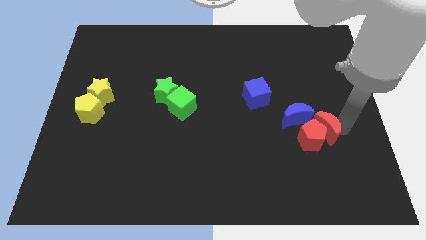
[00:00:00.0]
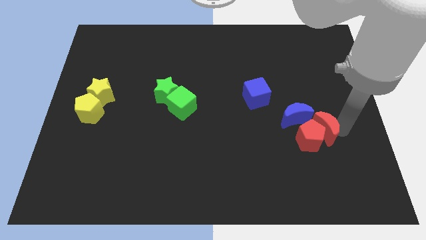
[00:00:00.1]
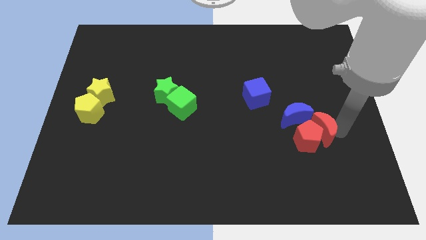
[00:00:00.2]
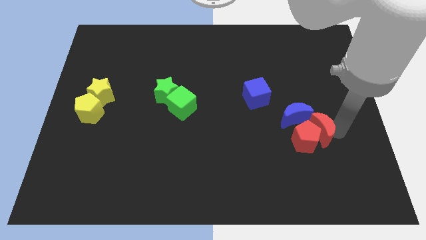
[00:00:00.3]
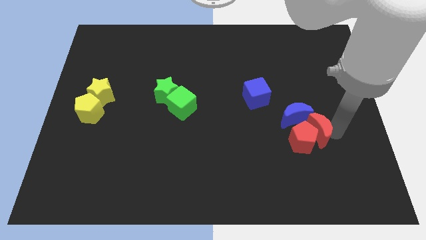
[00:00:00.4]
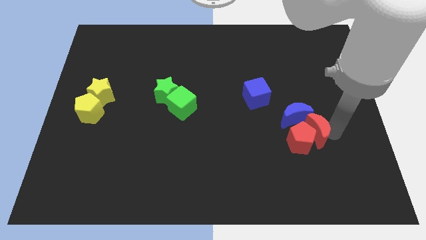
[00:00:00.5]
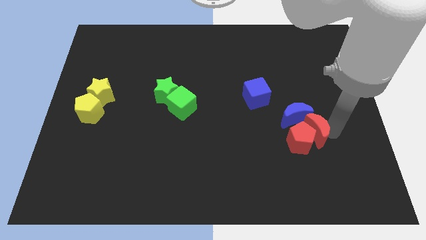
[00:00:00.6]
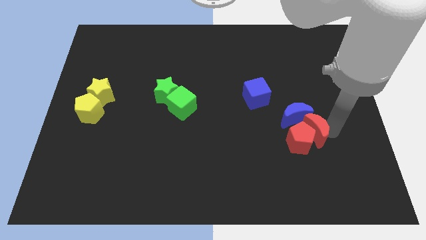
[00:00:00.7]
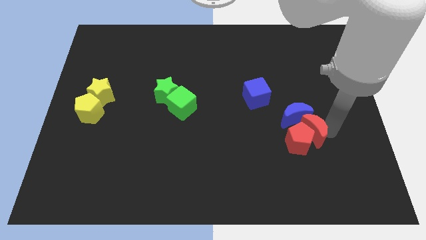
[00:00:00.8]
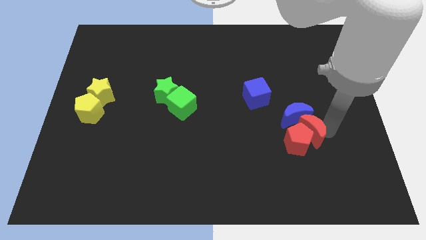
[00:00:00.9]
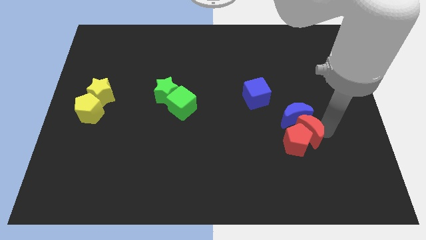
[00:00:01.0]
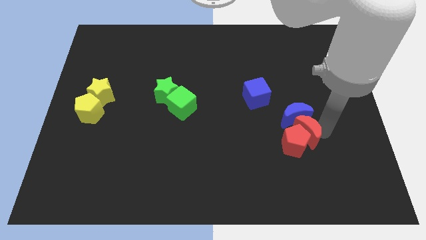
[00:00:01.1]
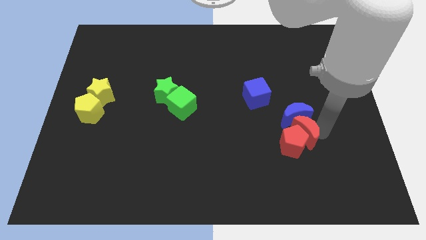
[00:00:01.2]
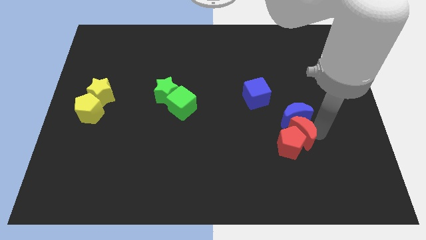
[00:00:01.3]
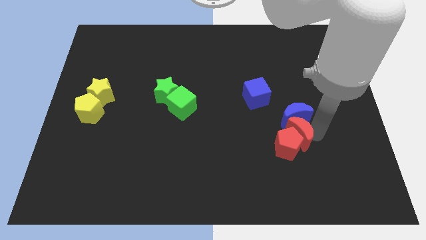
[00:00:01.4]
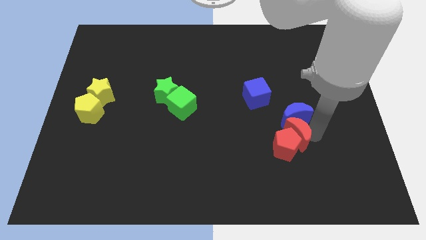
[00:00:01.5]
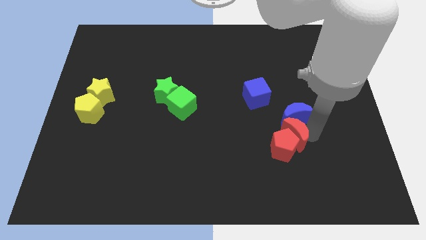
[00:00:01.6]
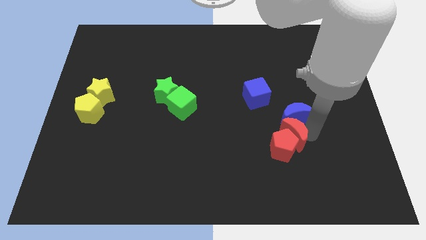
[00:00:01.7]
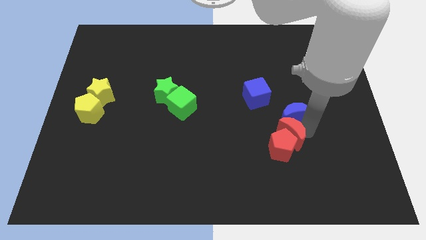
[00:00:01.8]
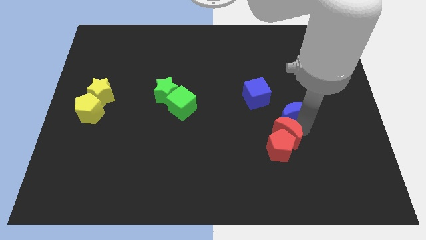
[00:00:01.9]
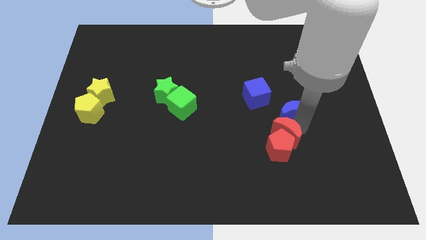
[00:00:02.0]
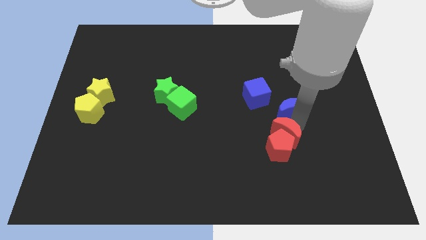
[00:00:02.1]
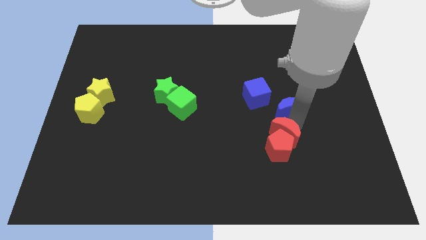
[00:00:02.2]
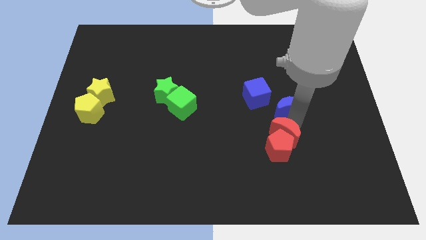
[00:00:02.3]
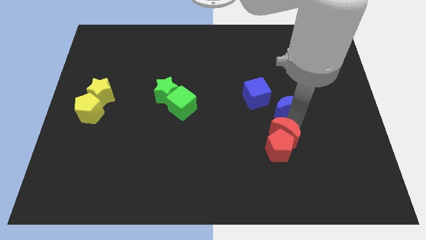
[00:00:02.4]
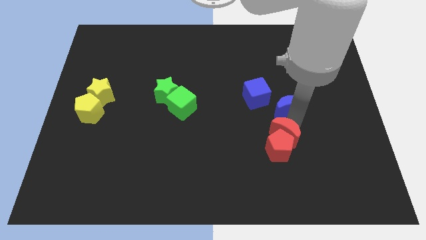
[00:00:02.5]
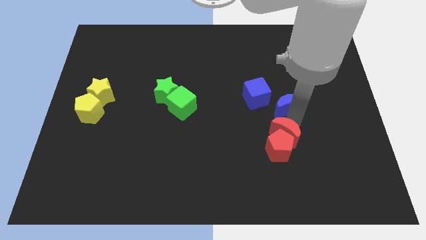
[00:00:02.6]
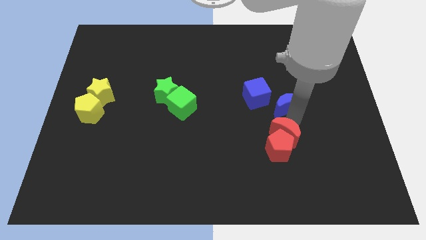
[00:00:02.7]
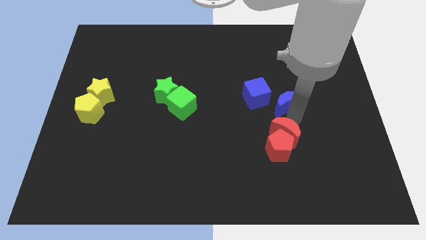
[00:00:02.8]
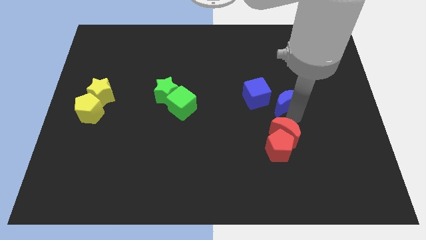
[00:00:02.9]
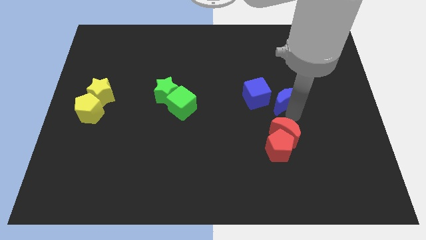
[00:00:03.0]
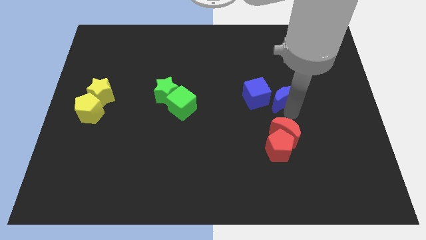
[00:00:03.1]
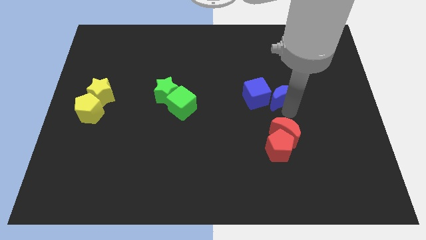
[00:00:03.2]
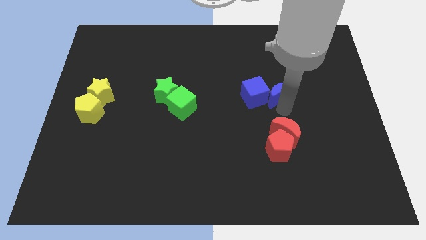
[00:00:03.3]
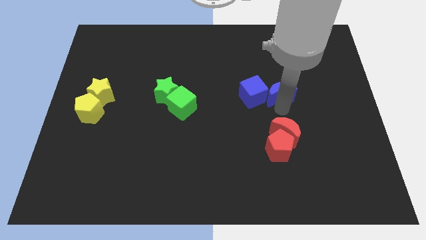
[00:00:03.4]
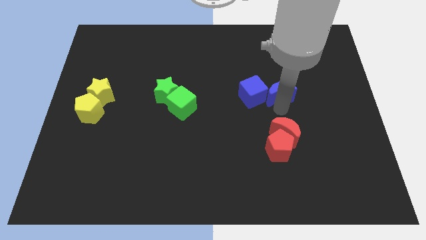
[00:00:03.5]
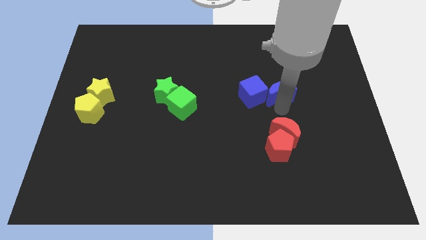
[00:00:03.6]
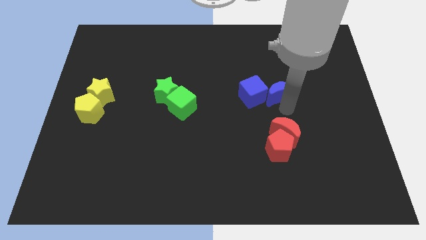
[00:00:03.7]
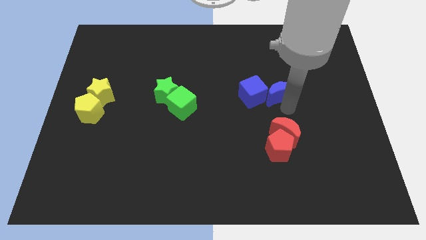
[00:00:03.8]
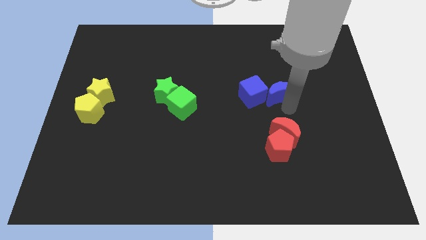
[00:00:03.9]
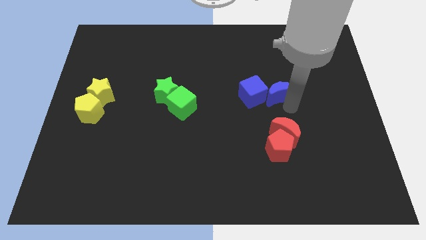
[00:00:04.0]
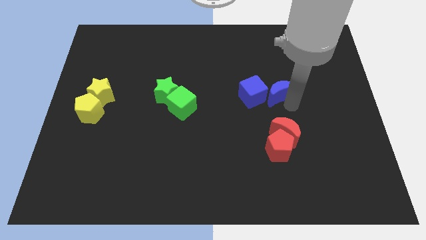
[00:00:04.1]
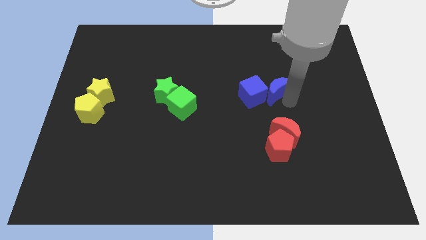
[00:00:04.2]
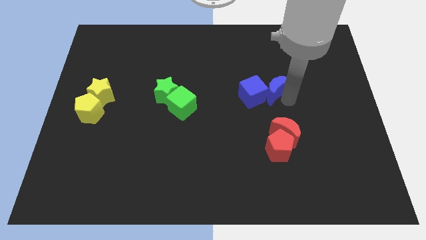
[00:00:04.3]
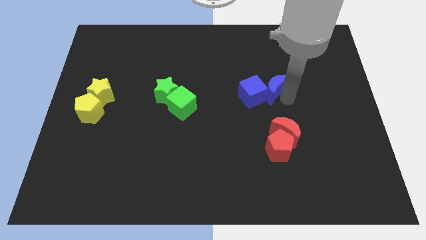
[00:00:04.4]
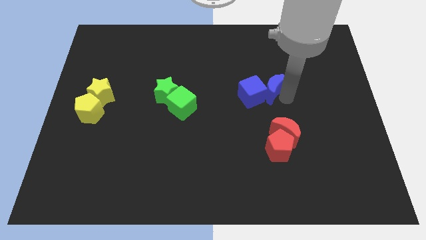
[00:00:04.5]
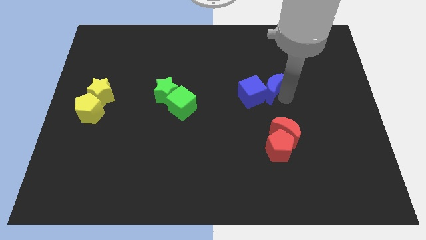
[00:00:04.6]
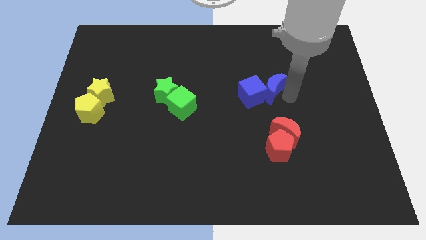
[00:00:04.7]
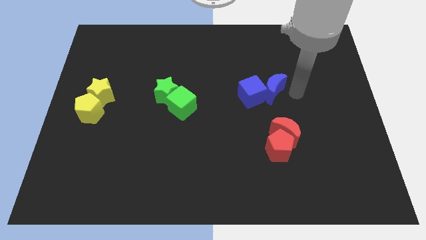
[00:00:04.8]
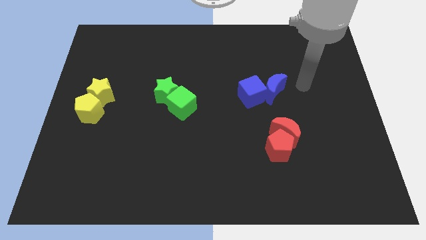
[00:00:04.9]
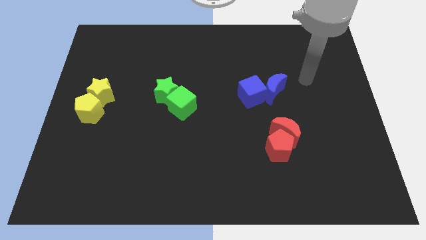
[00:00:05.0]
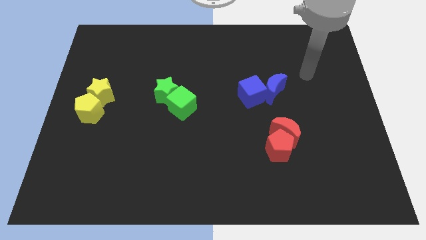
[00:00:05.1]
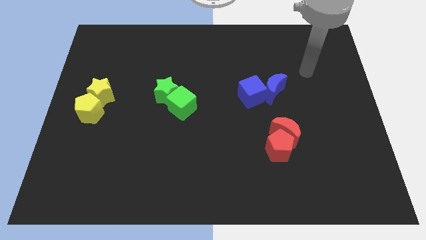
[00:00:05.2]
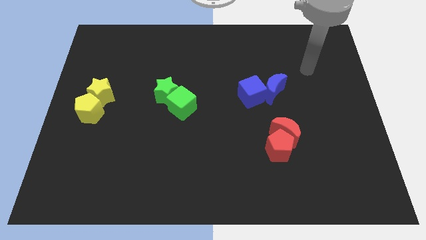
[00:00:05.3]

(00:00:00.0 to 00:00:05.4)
push the blue crescent into the blue cube

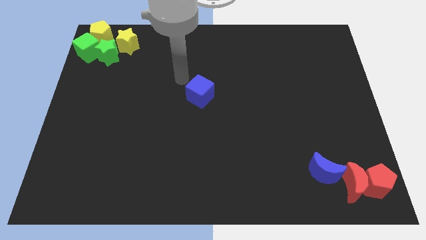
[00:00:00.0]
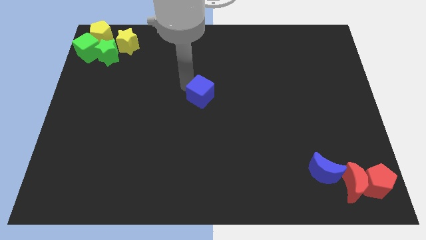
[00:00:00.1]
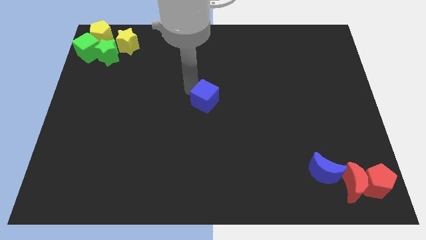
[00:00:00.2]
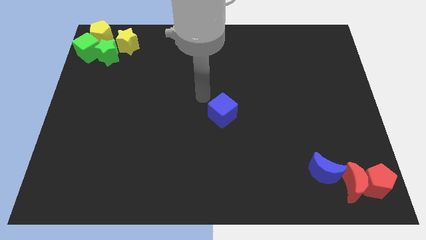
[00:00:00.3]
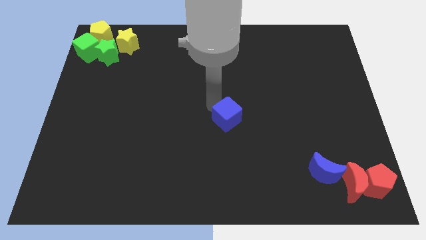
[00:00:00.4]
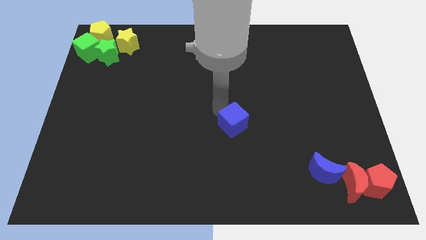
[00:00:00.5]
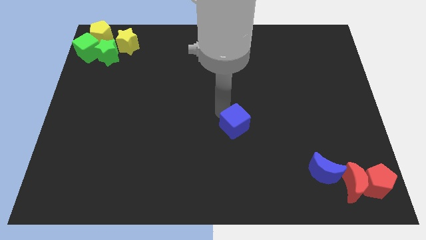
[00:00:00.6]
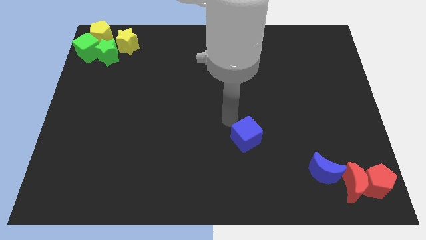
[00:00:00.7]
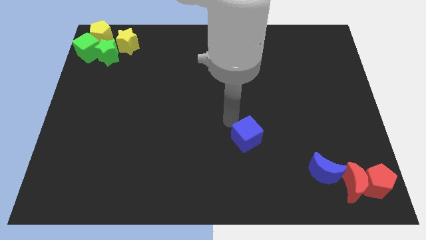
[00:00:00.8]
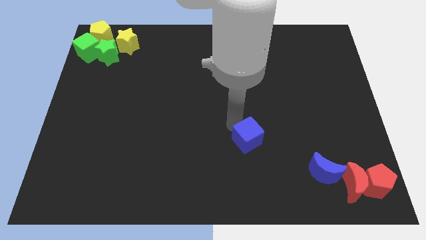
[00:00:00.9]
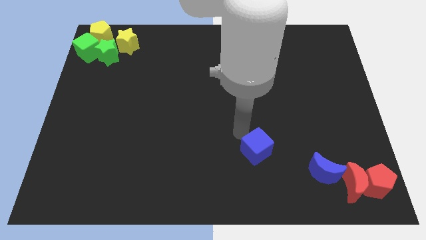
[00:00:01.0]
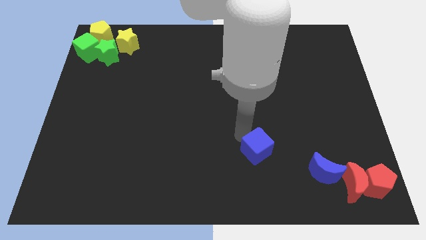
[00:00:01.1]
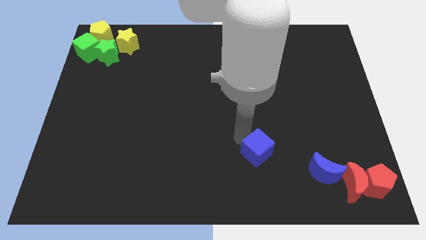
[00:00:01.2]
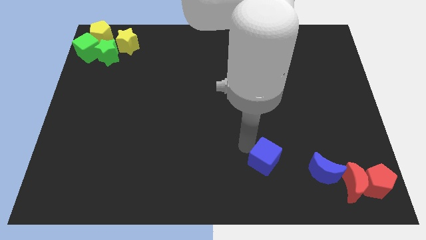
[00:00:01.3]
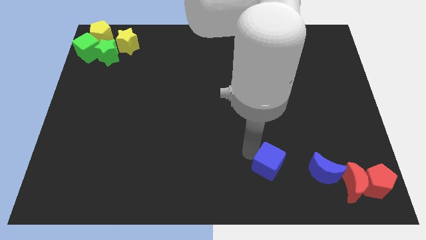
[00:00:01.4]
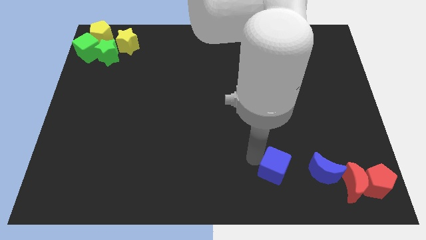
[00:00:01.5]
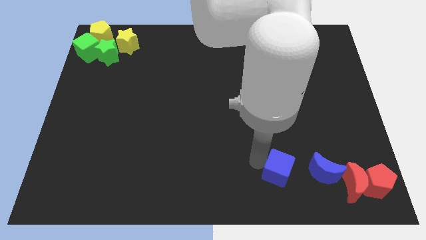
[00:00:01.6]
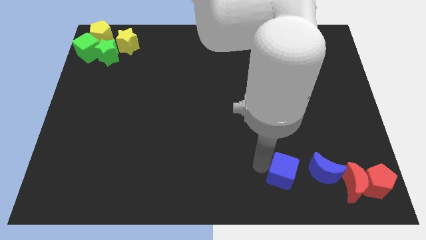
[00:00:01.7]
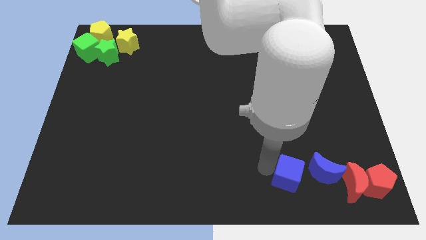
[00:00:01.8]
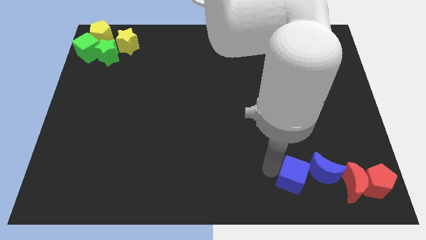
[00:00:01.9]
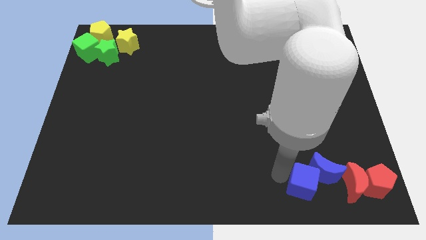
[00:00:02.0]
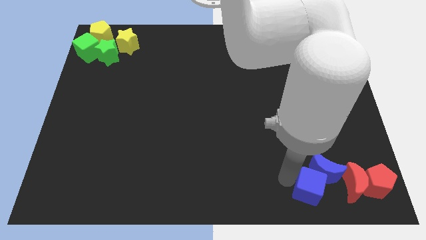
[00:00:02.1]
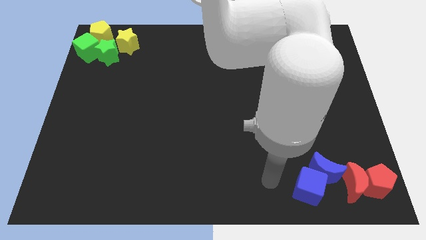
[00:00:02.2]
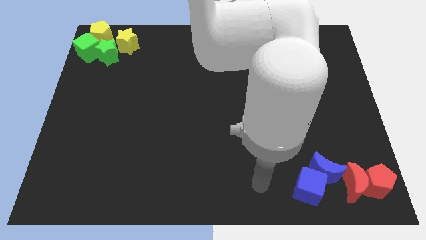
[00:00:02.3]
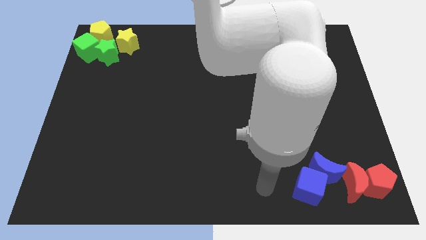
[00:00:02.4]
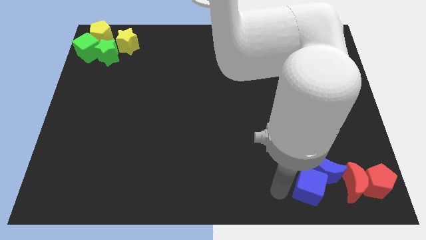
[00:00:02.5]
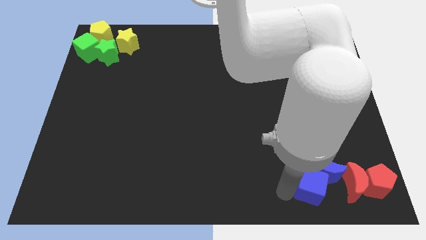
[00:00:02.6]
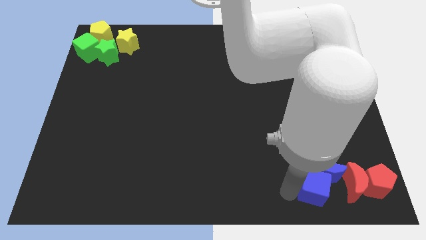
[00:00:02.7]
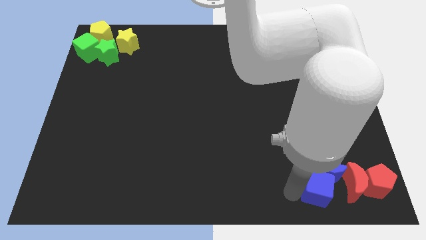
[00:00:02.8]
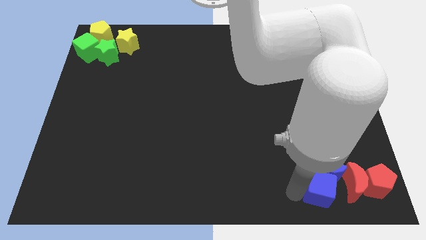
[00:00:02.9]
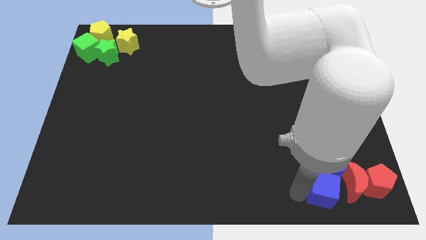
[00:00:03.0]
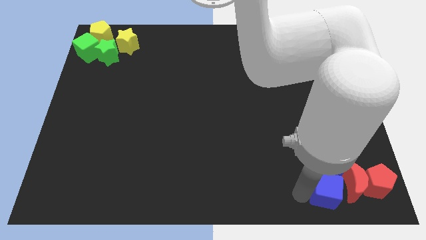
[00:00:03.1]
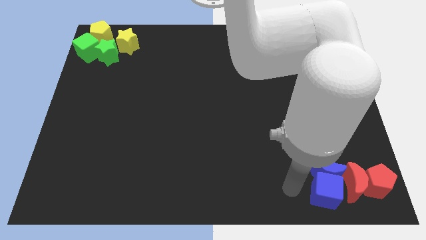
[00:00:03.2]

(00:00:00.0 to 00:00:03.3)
move the blue cube below into the blue crescent

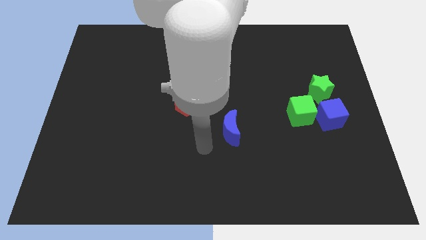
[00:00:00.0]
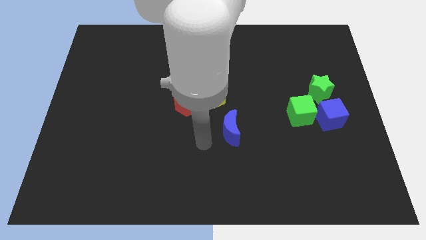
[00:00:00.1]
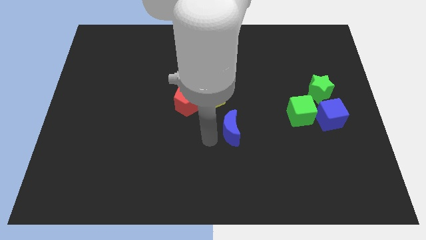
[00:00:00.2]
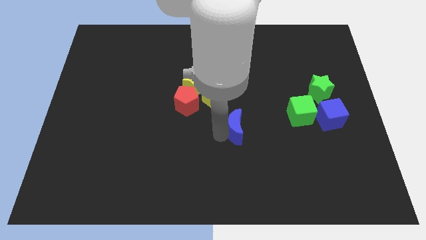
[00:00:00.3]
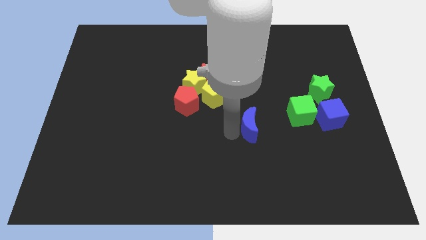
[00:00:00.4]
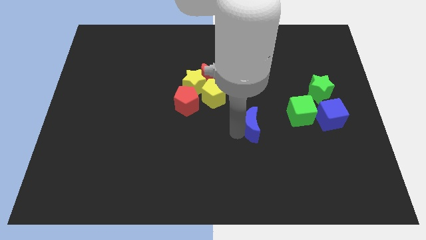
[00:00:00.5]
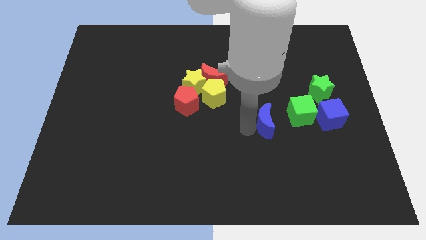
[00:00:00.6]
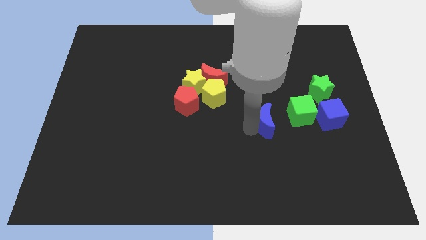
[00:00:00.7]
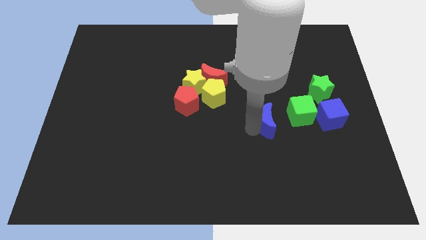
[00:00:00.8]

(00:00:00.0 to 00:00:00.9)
move the blue crescent towards the left side of the green cube
